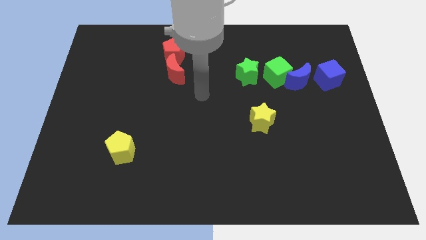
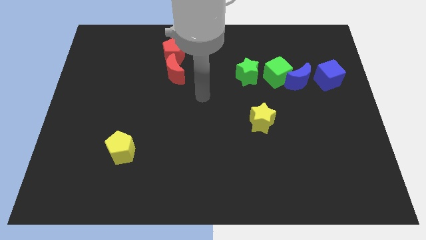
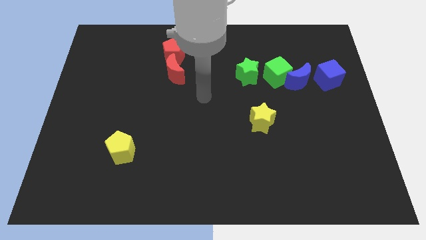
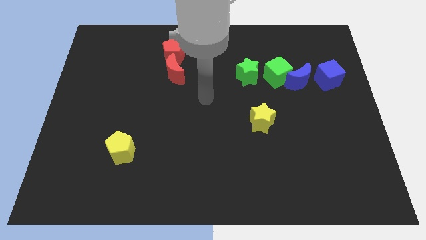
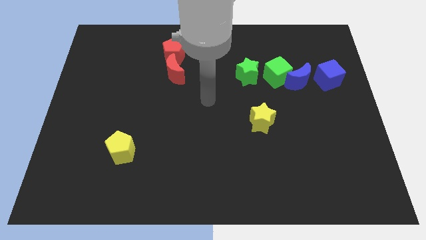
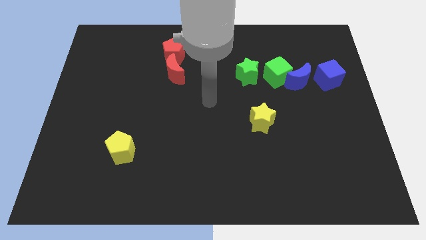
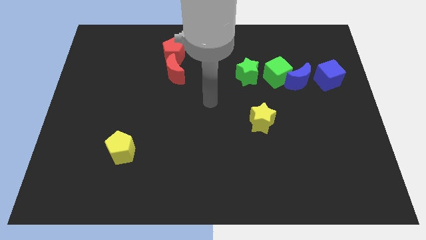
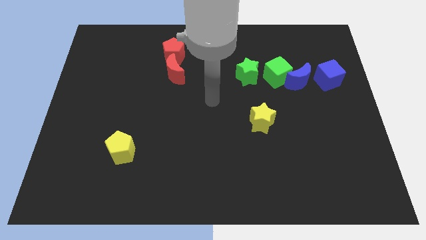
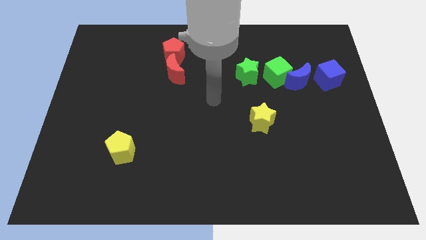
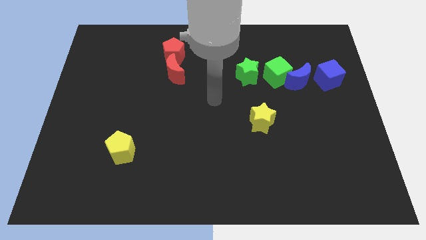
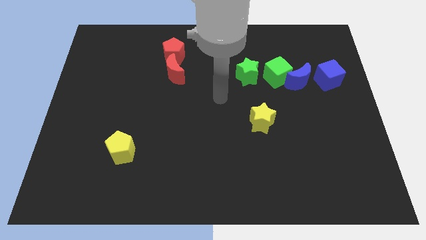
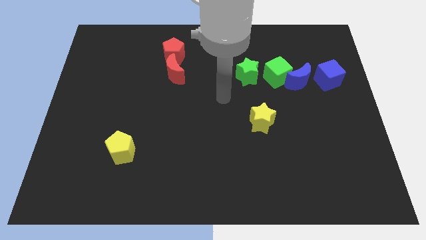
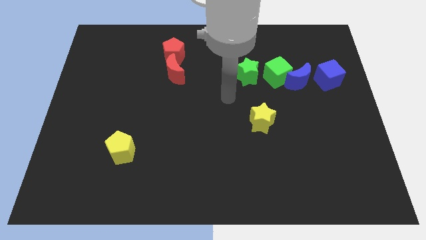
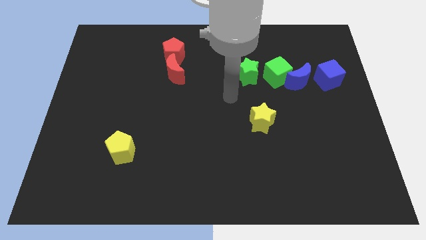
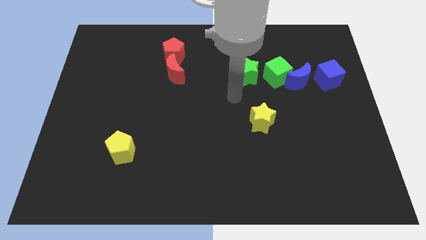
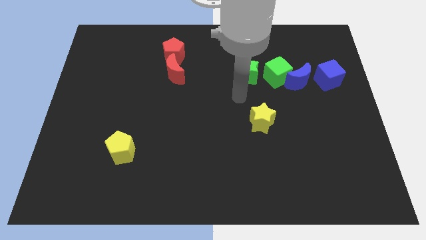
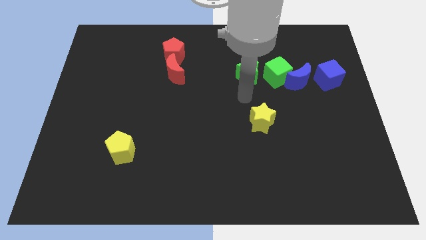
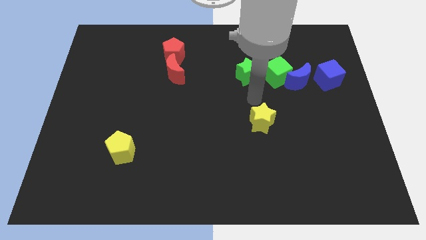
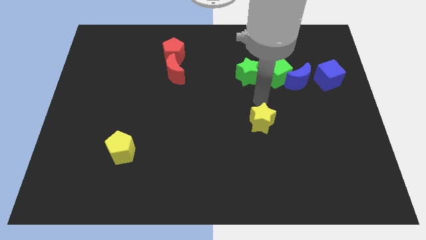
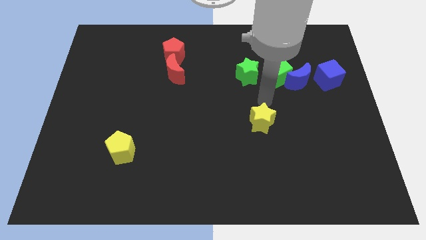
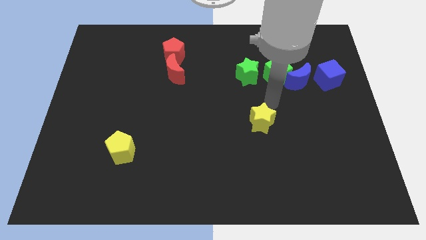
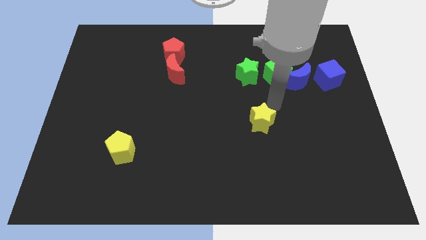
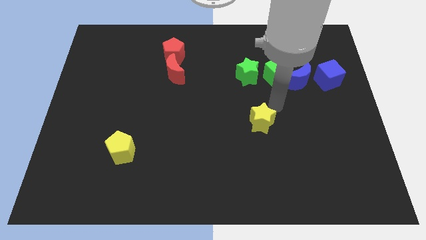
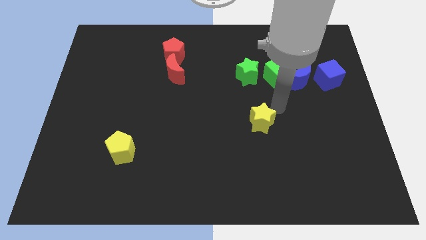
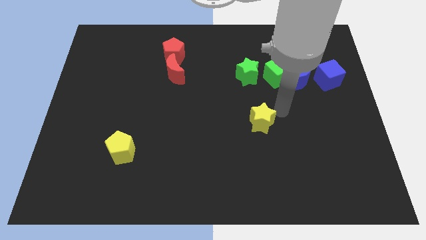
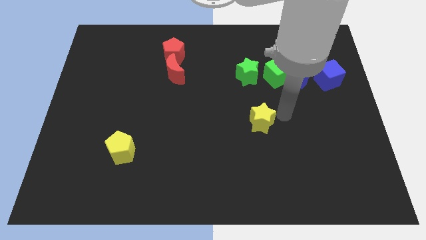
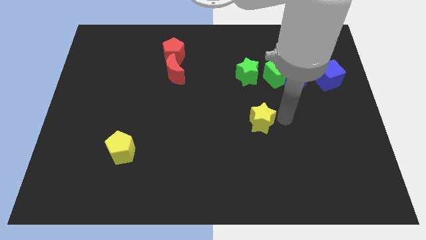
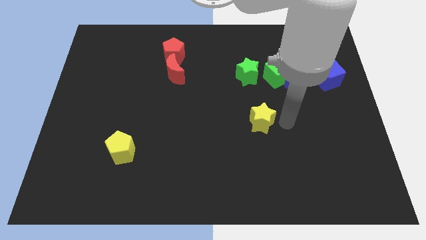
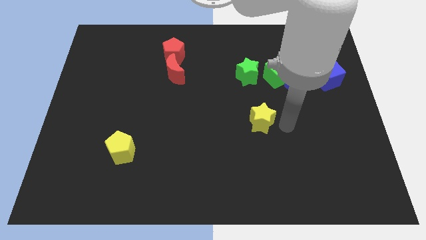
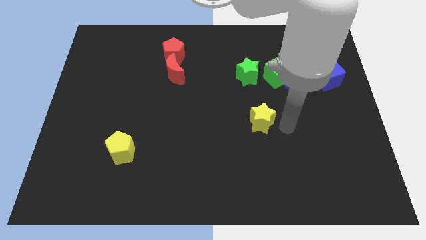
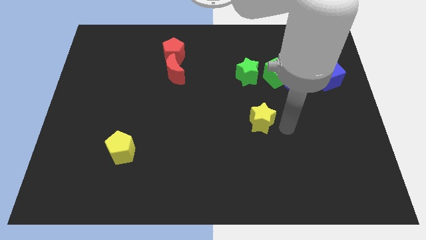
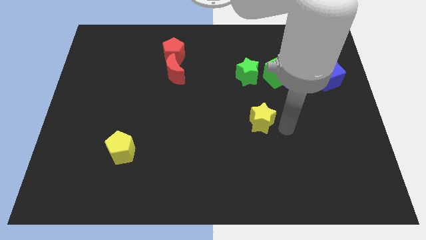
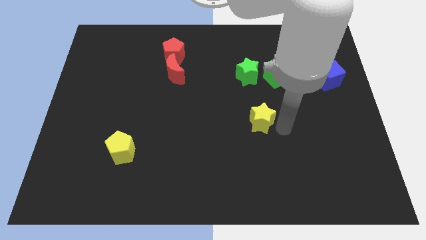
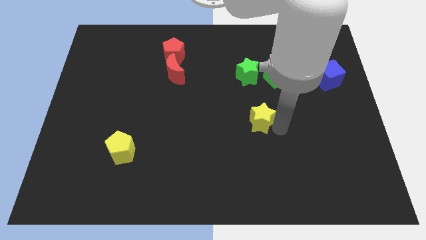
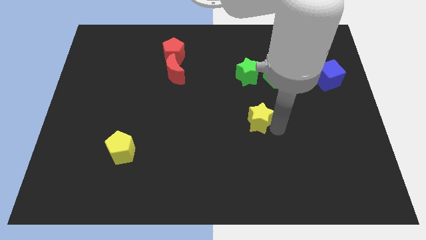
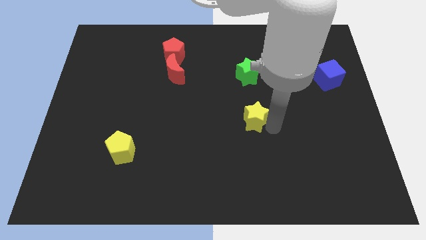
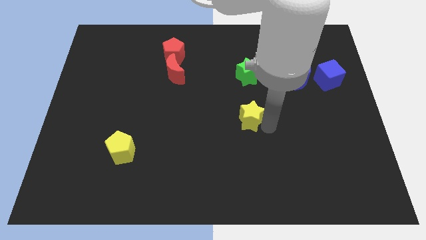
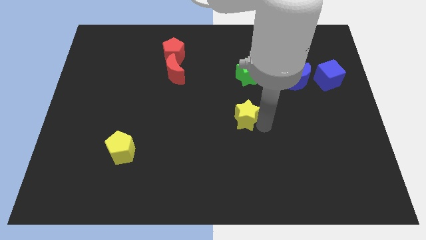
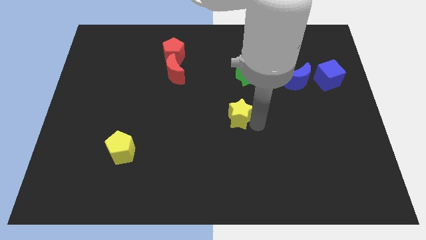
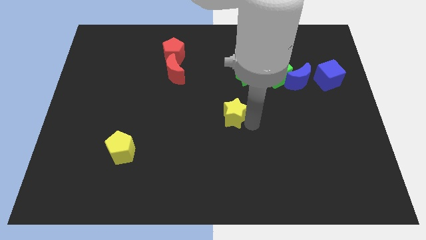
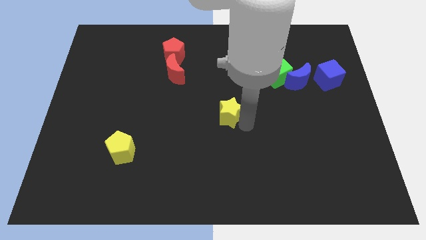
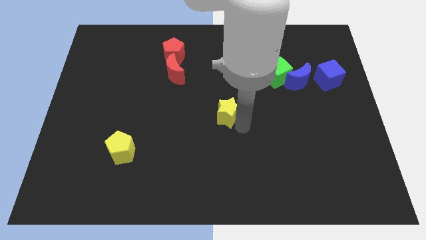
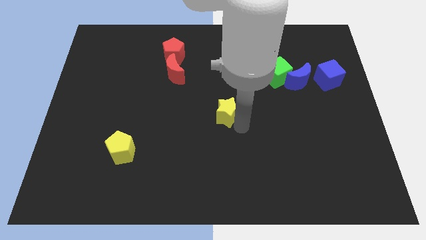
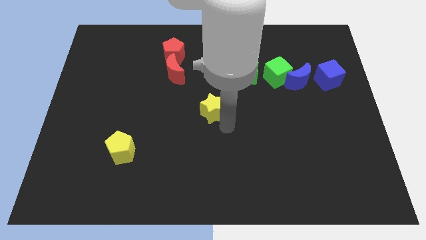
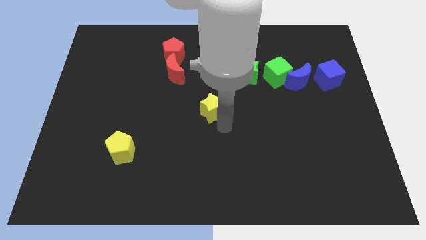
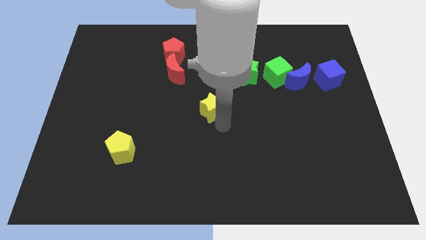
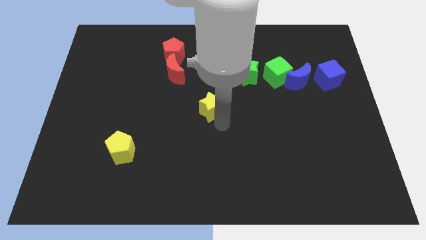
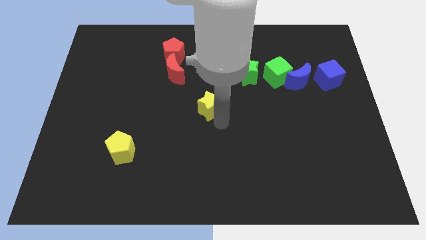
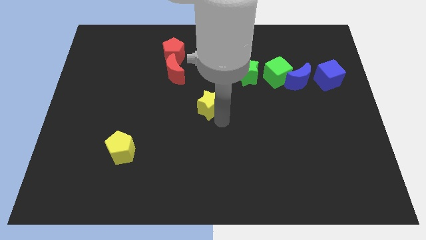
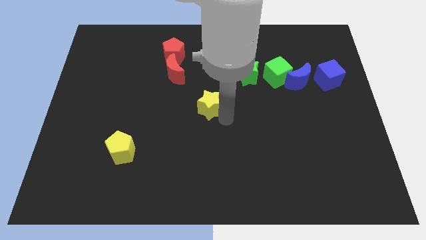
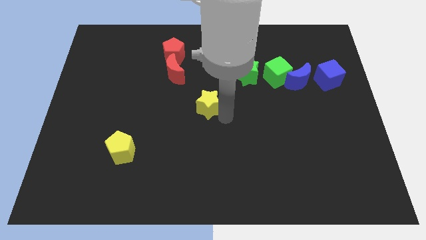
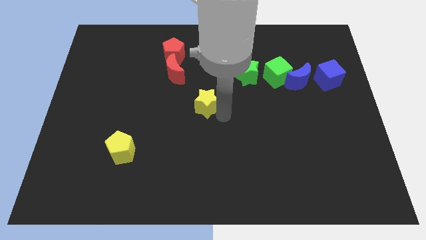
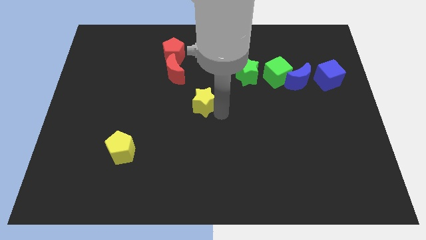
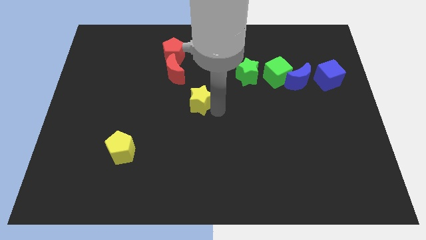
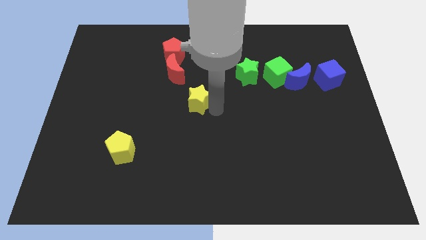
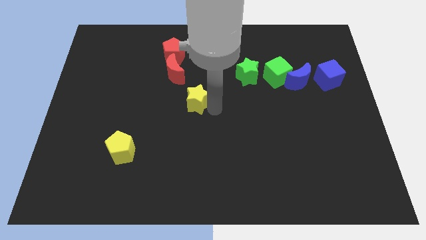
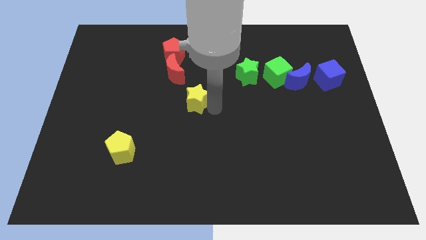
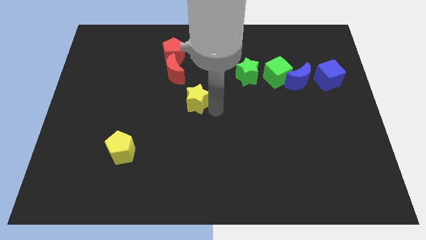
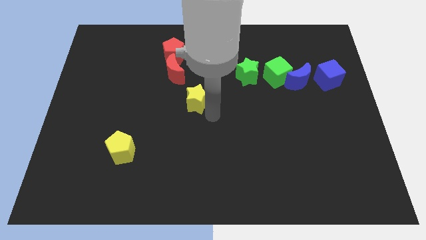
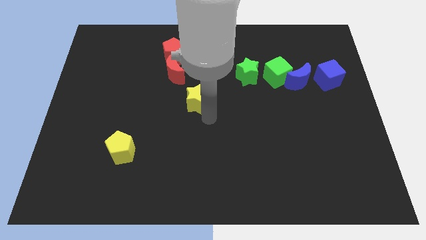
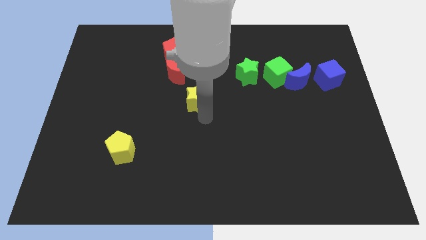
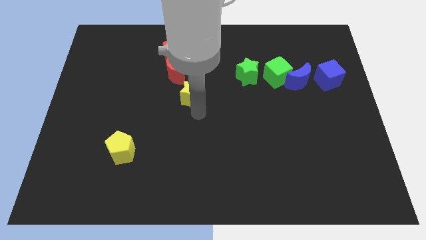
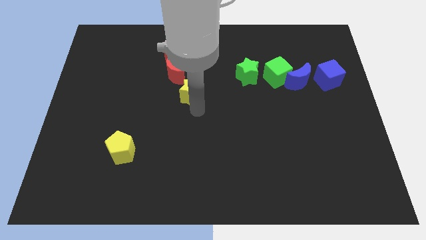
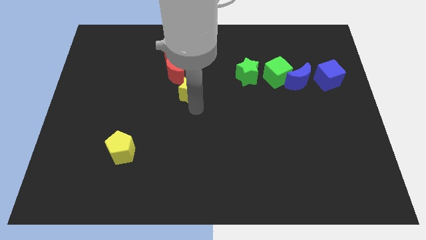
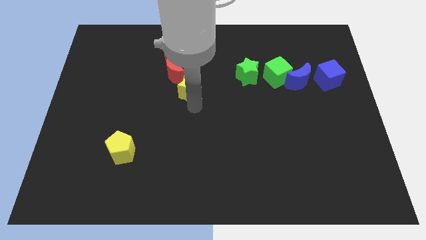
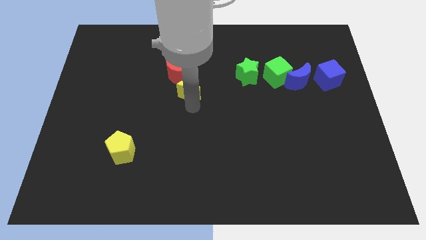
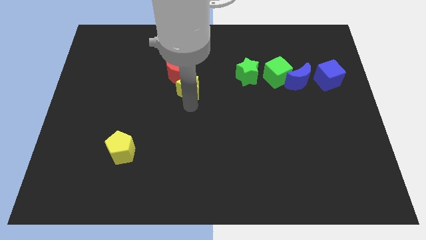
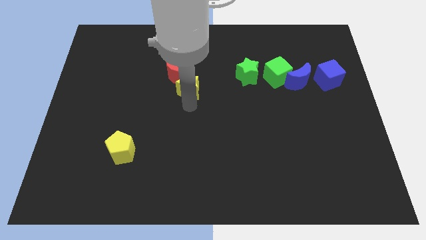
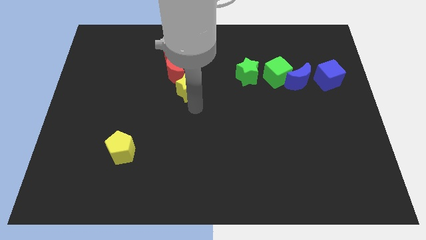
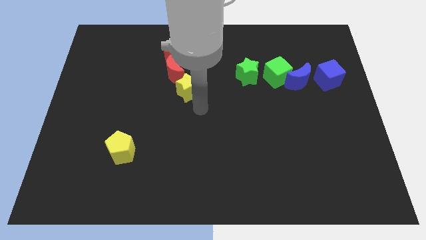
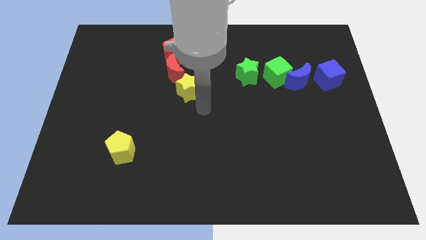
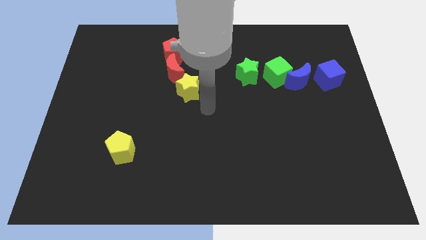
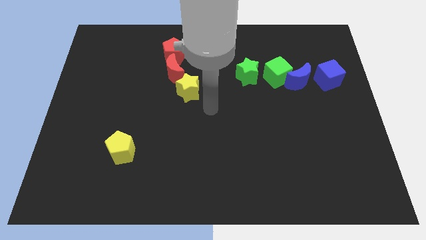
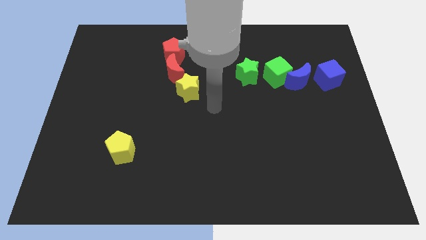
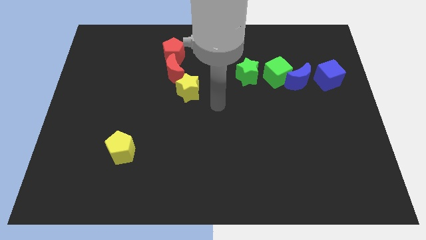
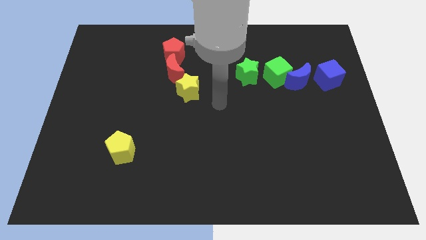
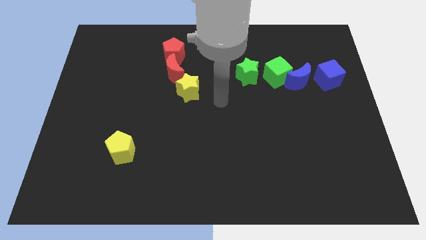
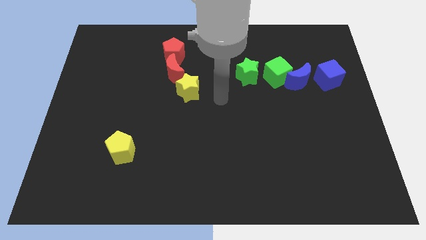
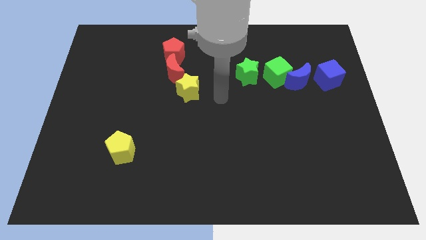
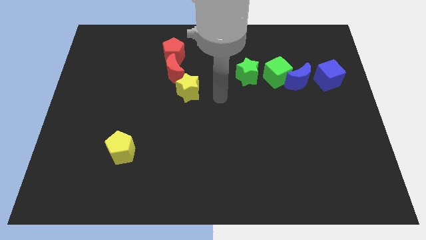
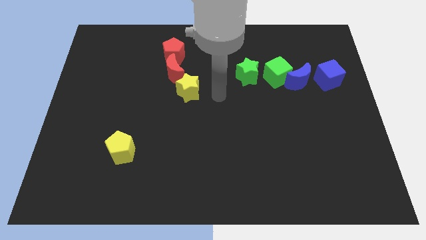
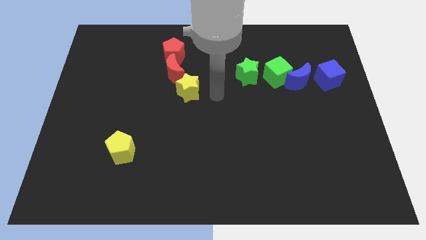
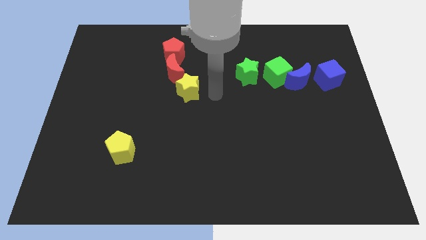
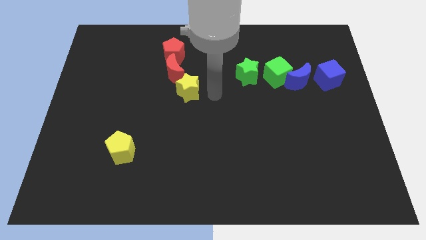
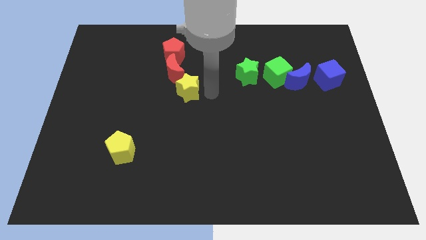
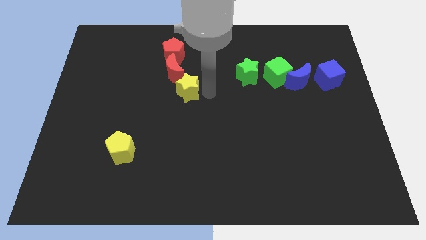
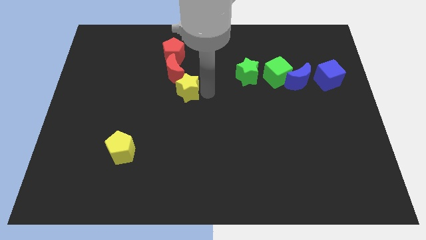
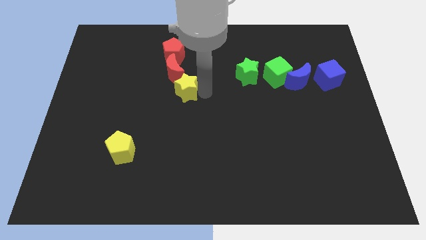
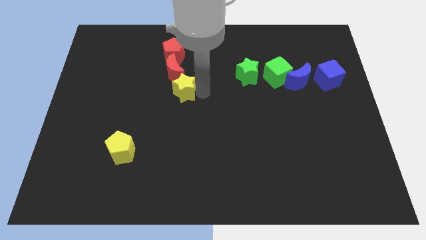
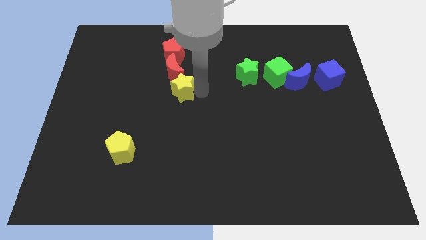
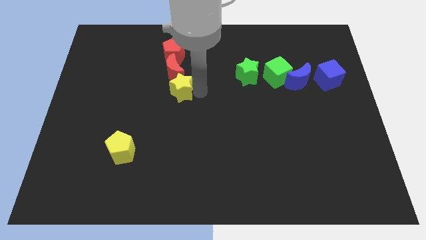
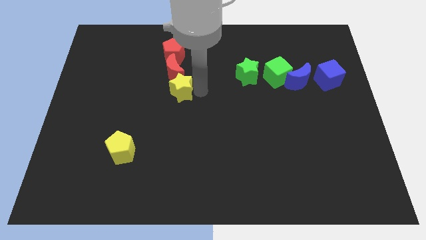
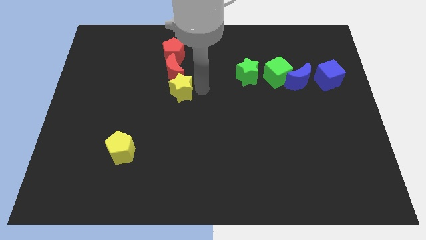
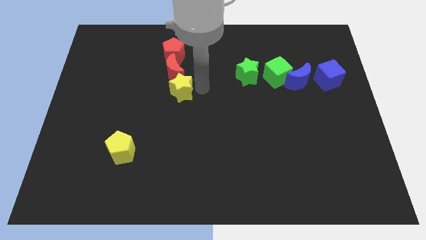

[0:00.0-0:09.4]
push the yellow star to the bottom of the red crescent
